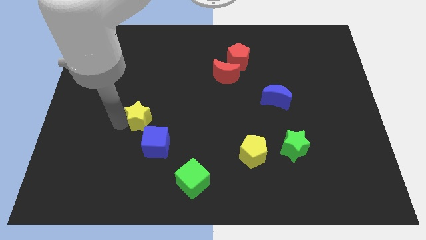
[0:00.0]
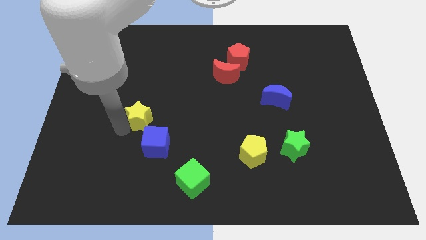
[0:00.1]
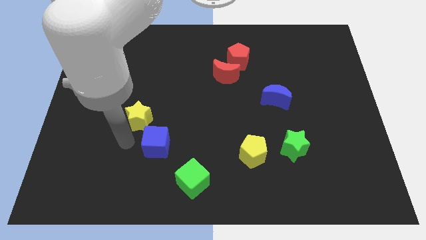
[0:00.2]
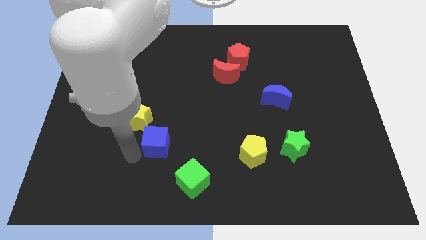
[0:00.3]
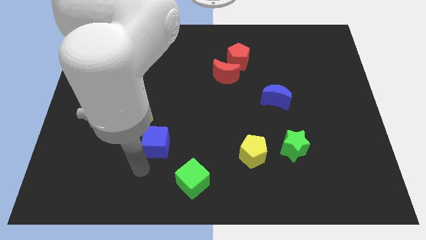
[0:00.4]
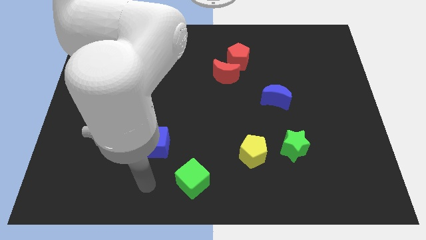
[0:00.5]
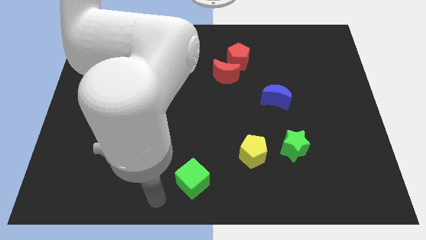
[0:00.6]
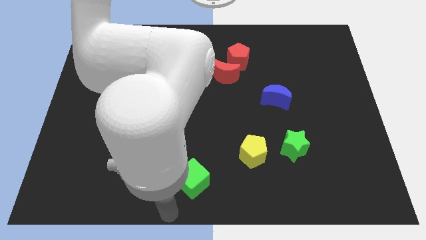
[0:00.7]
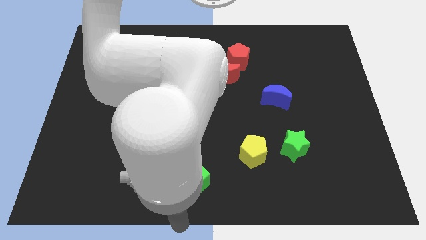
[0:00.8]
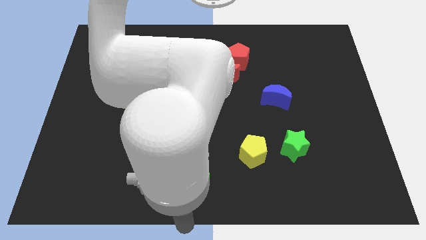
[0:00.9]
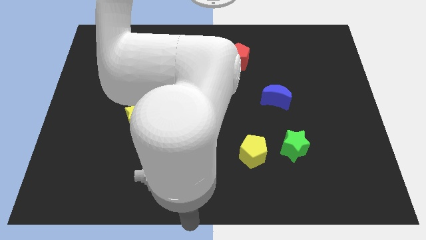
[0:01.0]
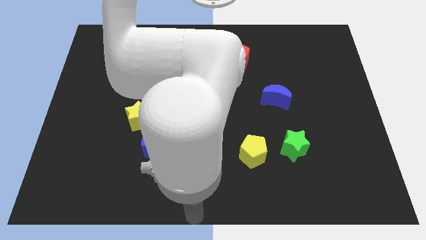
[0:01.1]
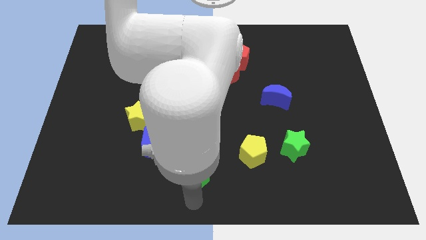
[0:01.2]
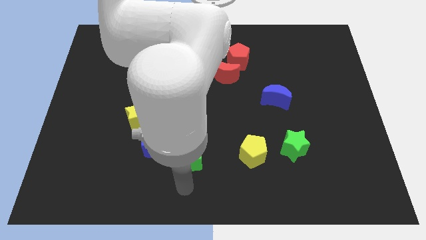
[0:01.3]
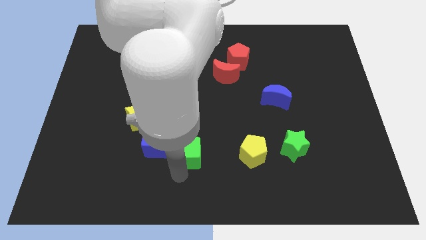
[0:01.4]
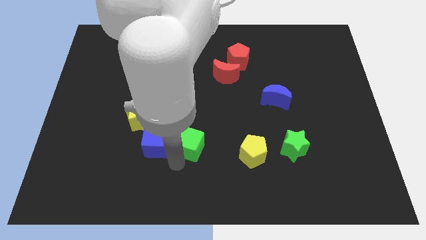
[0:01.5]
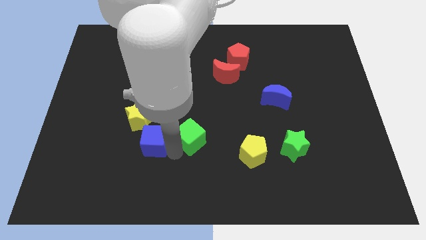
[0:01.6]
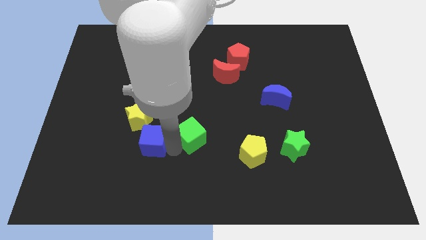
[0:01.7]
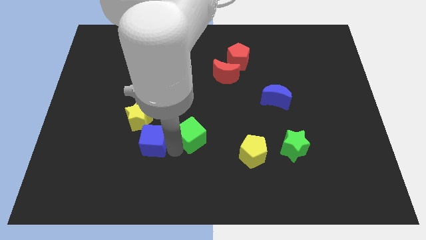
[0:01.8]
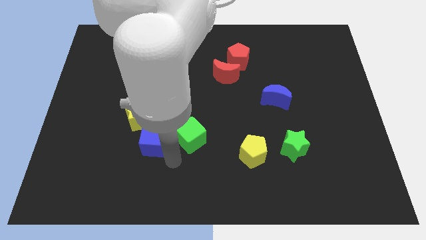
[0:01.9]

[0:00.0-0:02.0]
move the green cube to the right of the blue cube

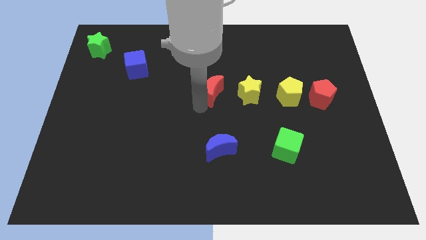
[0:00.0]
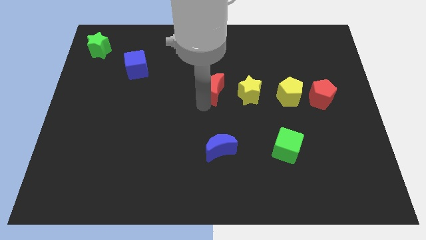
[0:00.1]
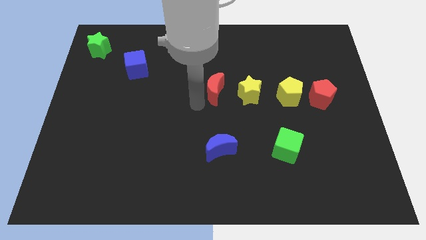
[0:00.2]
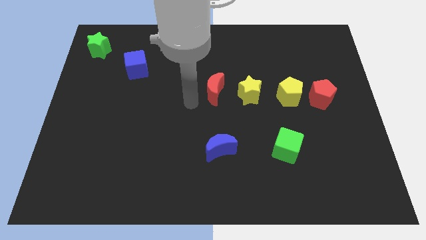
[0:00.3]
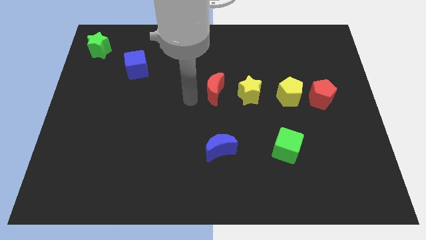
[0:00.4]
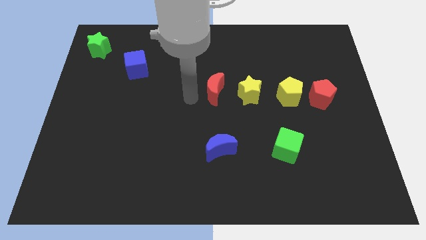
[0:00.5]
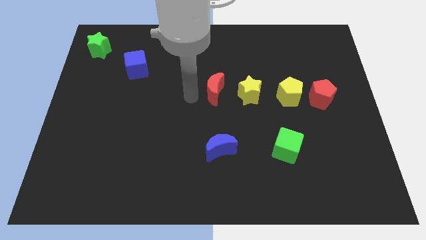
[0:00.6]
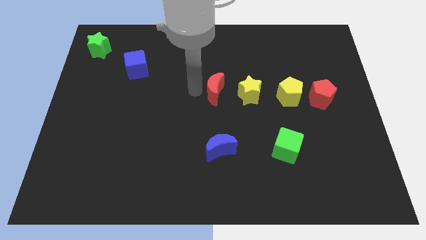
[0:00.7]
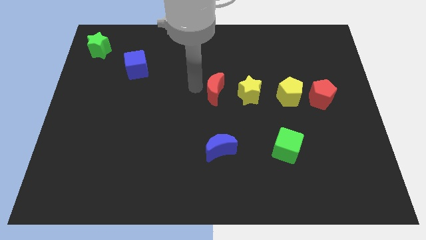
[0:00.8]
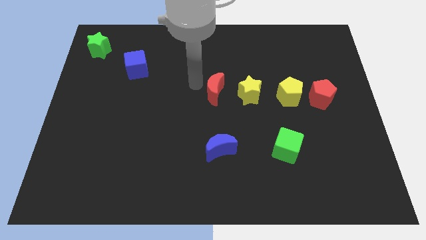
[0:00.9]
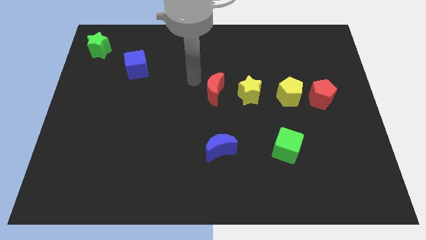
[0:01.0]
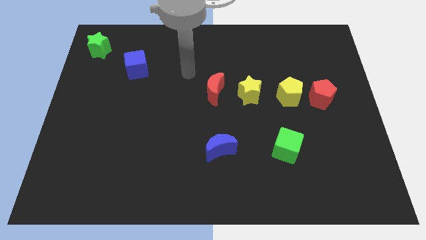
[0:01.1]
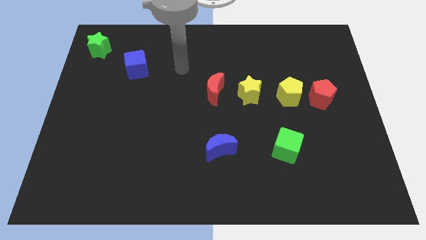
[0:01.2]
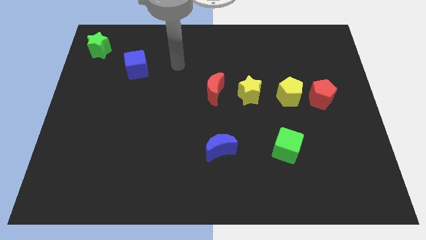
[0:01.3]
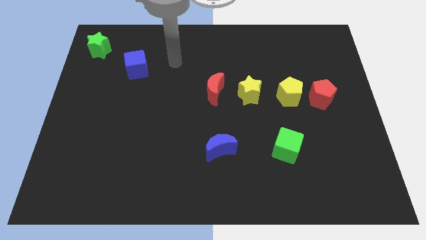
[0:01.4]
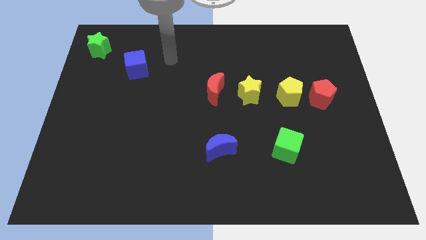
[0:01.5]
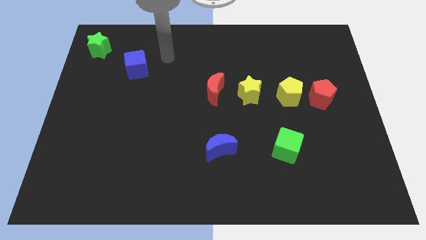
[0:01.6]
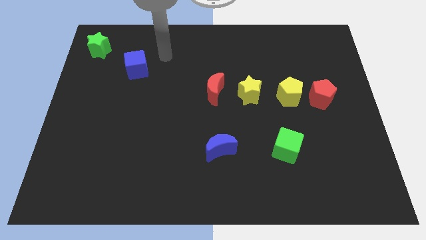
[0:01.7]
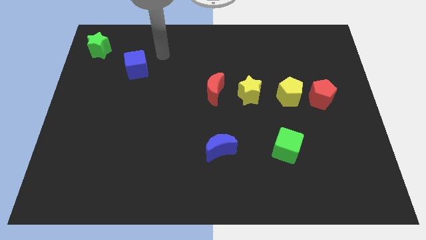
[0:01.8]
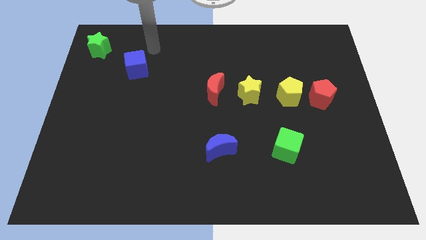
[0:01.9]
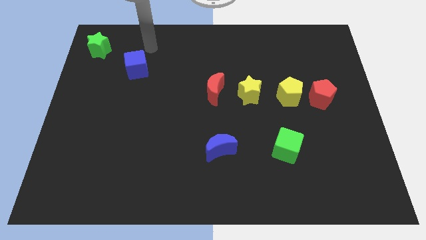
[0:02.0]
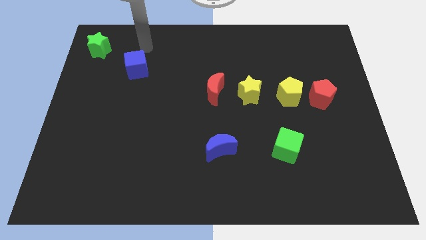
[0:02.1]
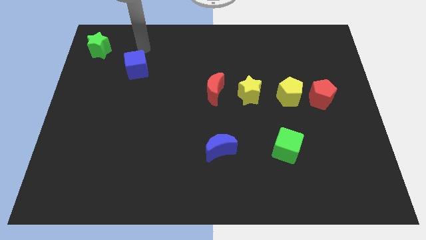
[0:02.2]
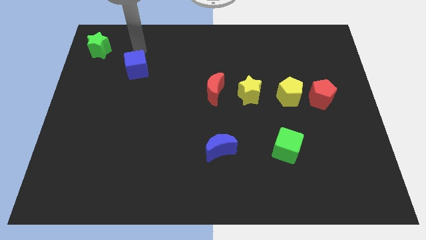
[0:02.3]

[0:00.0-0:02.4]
move the arm towards the top of the blue cube

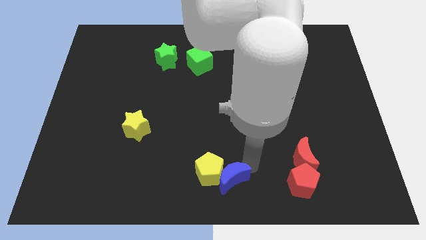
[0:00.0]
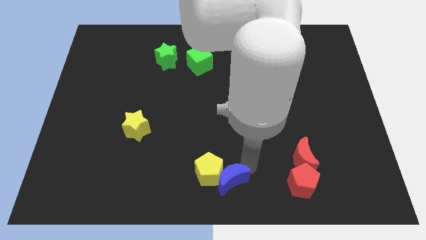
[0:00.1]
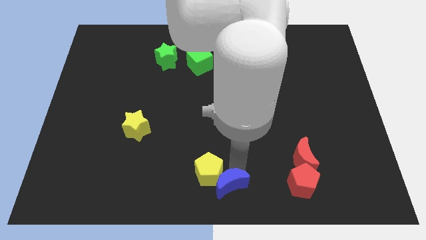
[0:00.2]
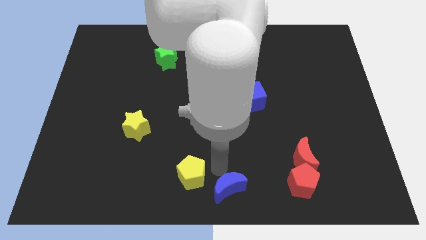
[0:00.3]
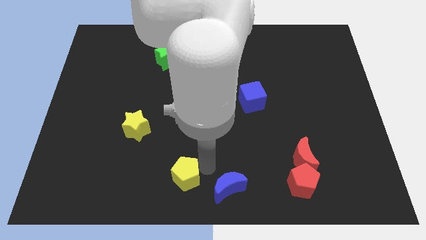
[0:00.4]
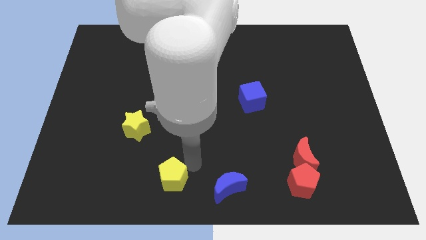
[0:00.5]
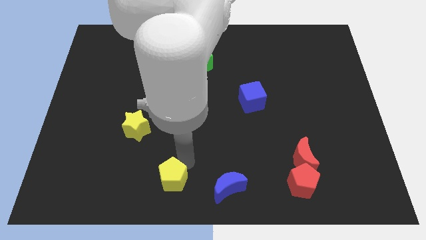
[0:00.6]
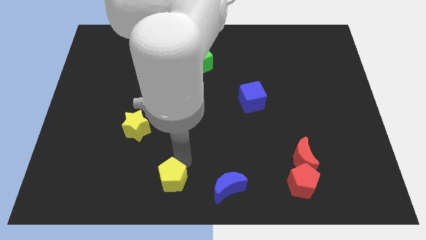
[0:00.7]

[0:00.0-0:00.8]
push the yellow pentagon away from the blue crescent

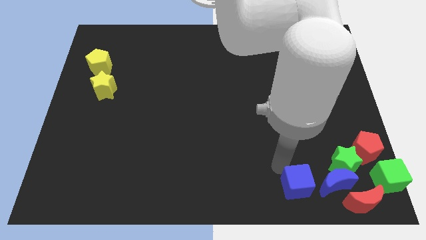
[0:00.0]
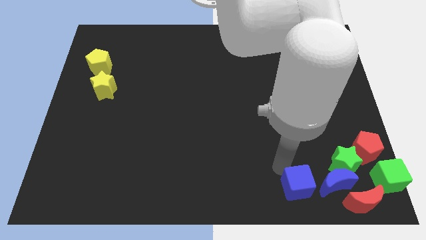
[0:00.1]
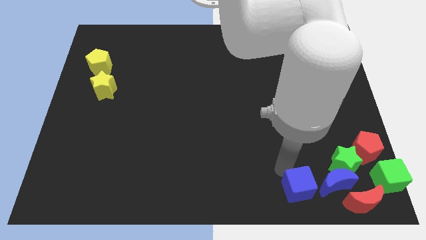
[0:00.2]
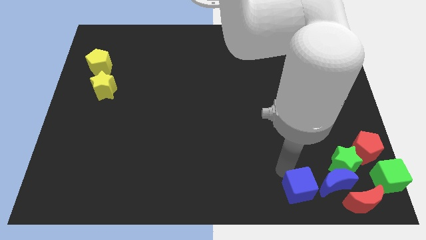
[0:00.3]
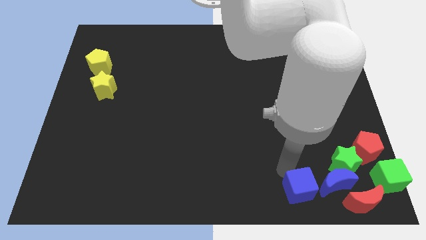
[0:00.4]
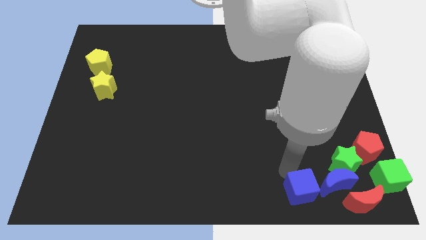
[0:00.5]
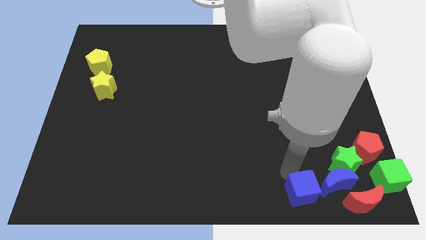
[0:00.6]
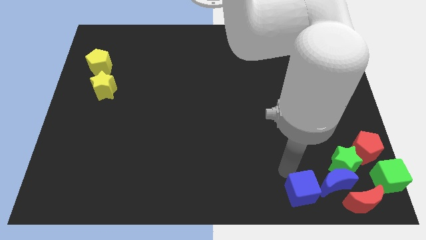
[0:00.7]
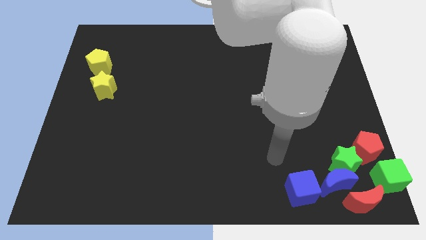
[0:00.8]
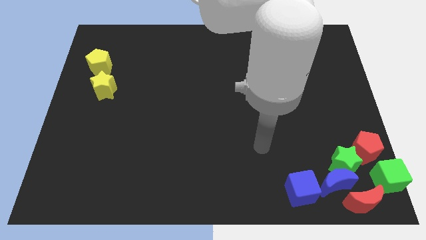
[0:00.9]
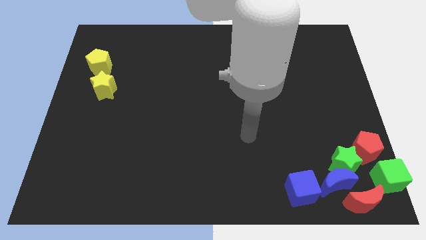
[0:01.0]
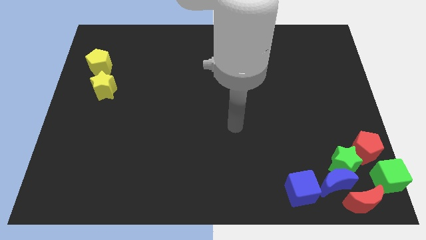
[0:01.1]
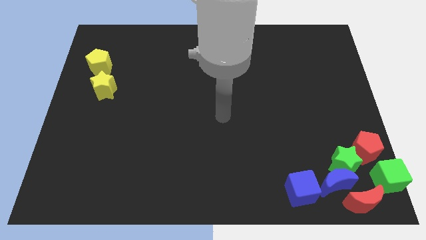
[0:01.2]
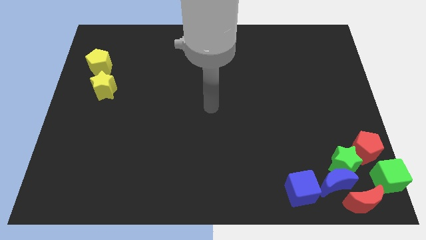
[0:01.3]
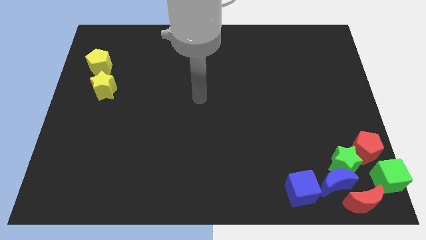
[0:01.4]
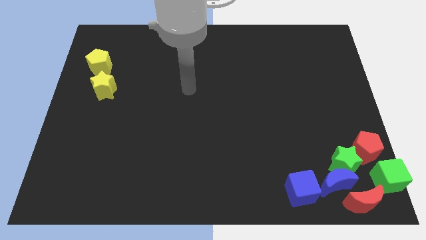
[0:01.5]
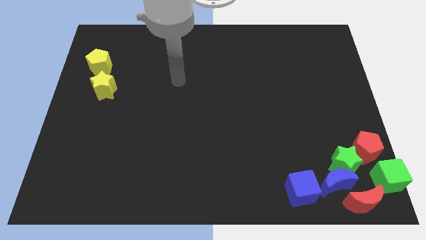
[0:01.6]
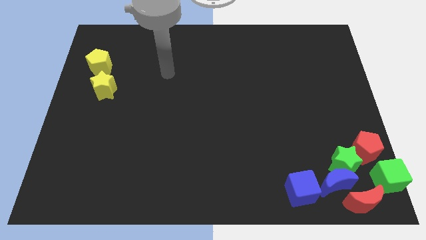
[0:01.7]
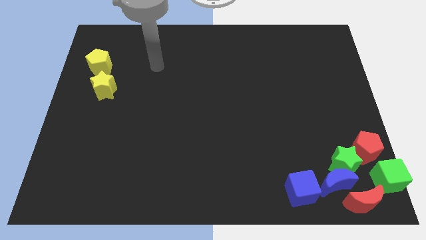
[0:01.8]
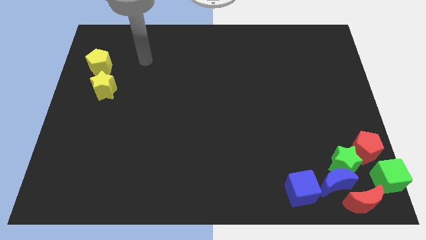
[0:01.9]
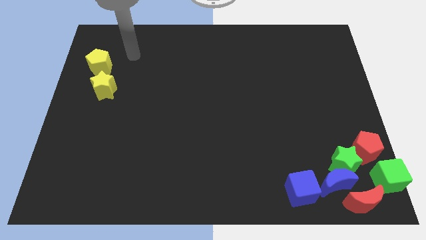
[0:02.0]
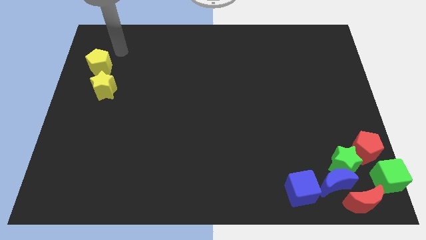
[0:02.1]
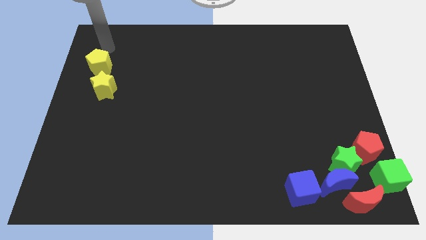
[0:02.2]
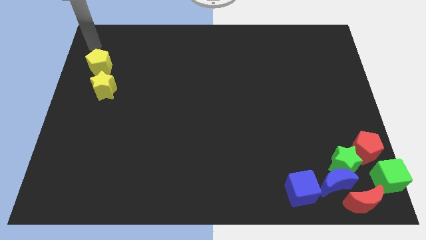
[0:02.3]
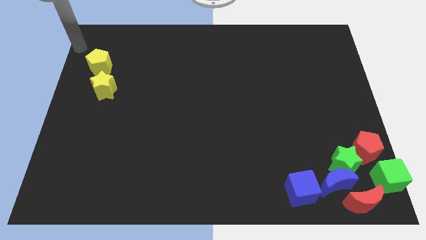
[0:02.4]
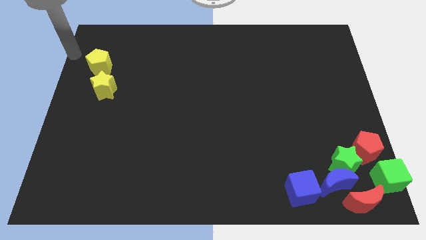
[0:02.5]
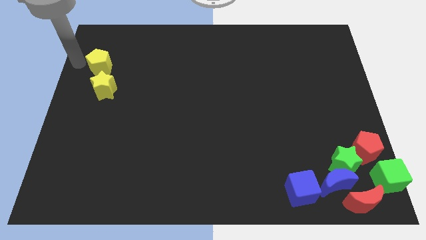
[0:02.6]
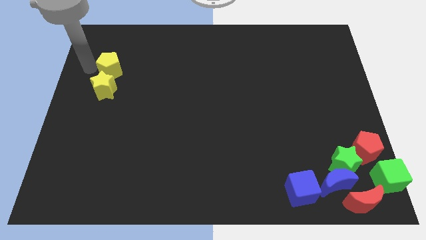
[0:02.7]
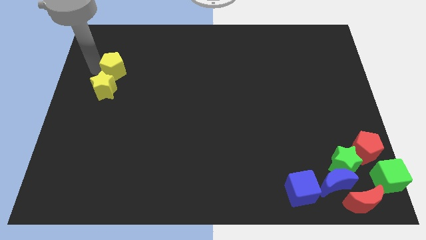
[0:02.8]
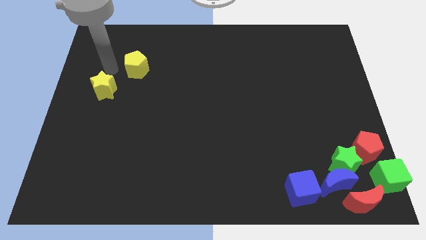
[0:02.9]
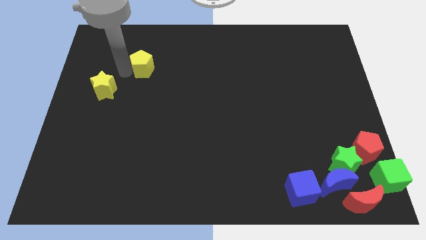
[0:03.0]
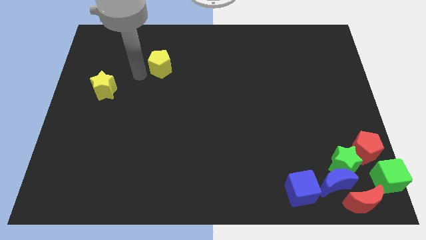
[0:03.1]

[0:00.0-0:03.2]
move the yellow pentagon to the left side

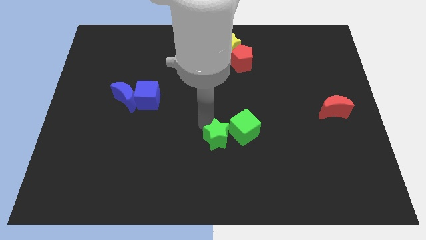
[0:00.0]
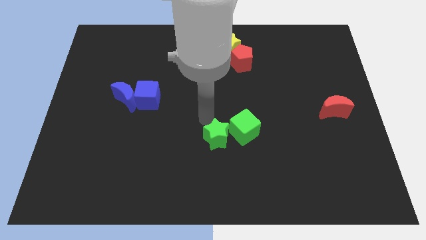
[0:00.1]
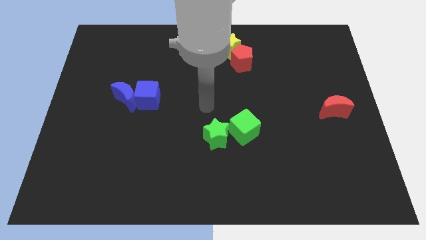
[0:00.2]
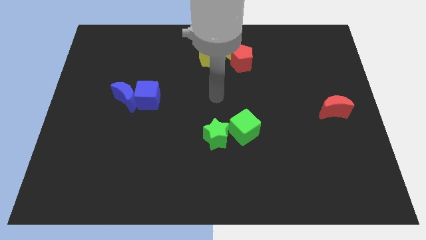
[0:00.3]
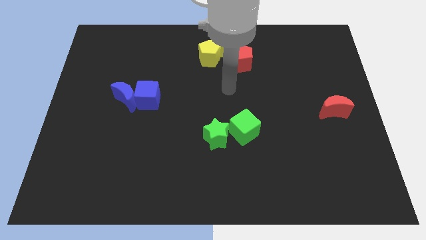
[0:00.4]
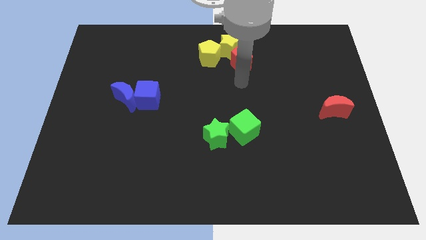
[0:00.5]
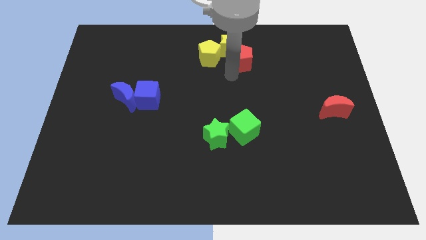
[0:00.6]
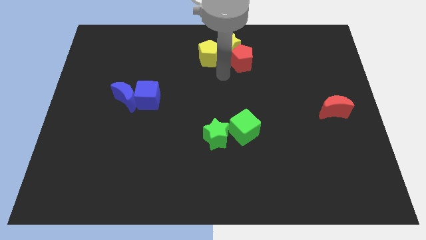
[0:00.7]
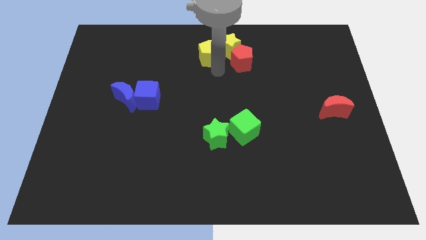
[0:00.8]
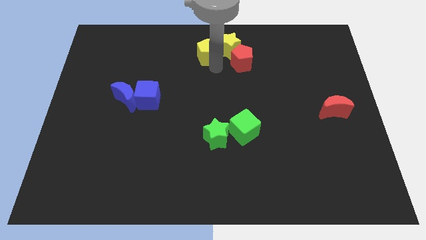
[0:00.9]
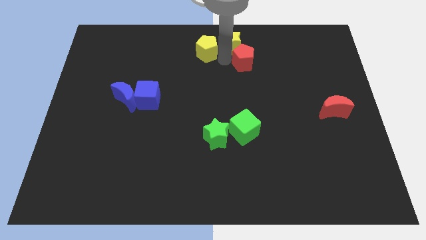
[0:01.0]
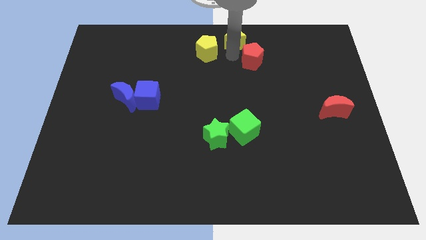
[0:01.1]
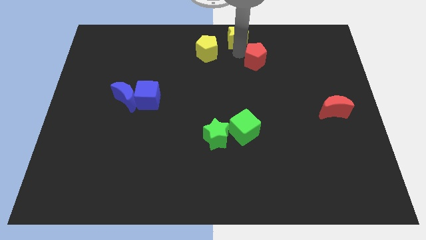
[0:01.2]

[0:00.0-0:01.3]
separate the group of yellow blocks
